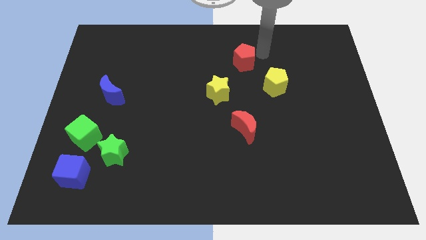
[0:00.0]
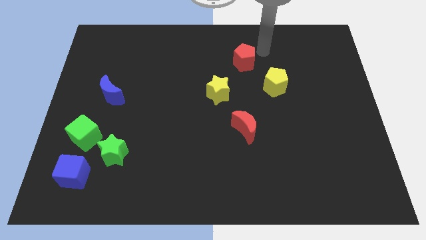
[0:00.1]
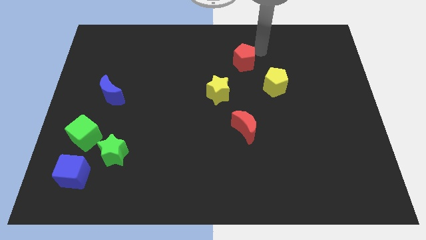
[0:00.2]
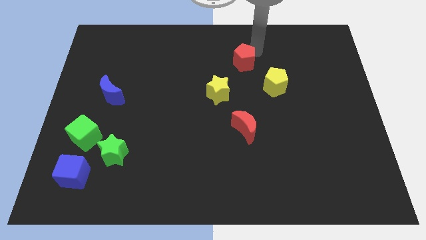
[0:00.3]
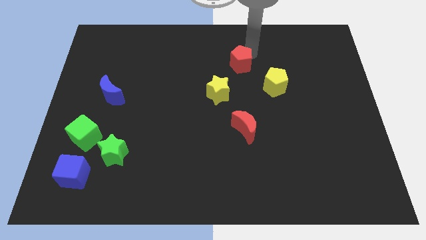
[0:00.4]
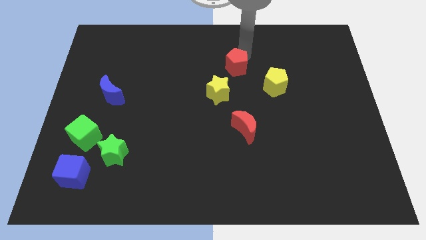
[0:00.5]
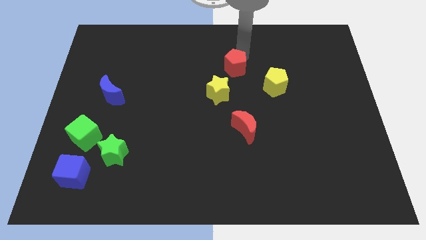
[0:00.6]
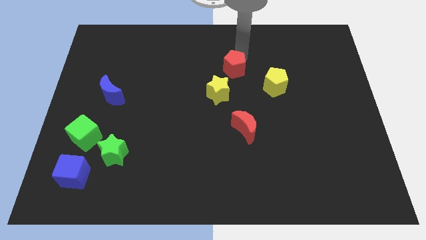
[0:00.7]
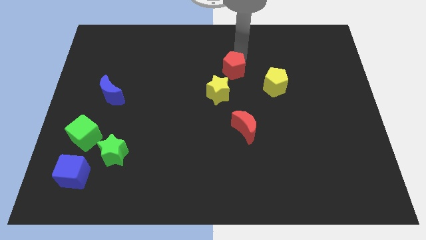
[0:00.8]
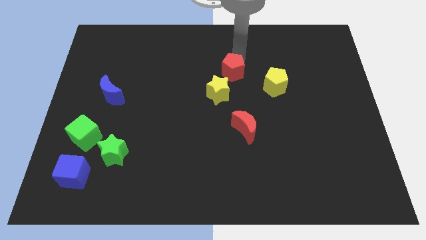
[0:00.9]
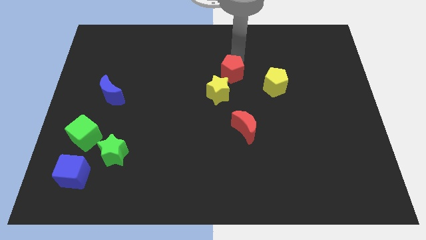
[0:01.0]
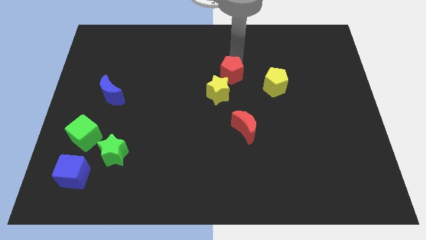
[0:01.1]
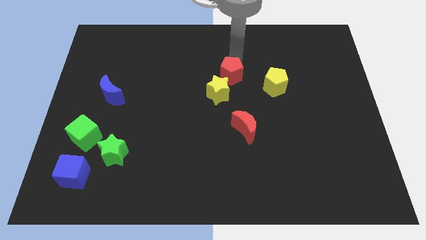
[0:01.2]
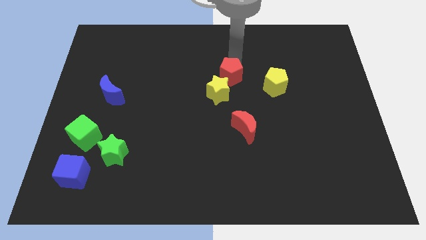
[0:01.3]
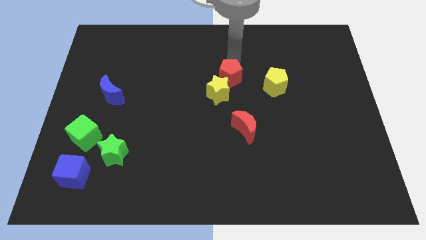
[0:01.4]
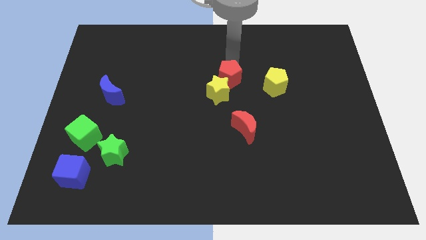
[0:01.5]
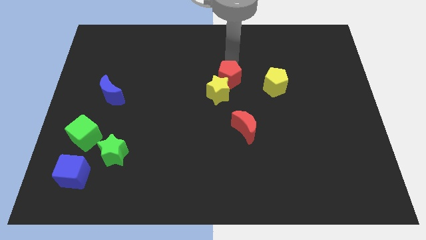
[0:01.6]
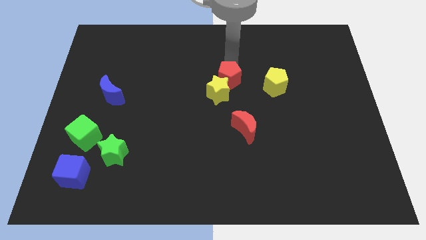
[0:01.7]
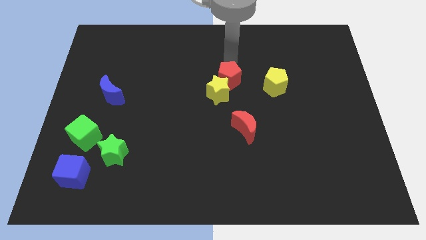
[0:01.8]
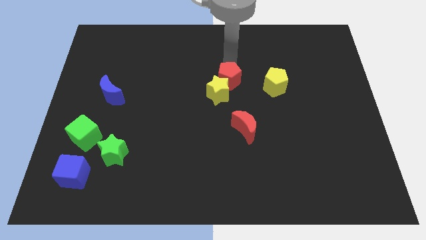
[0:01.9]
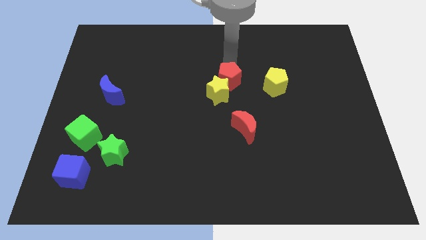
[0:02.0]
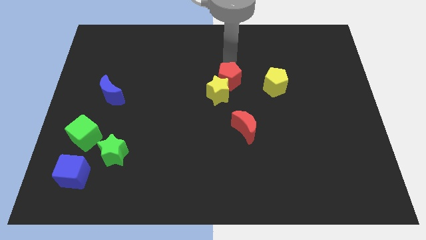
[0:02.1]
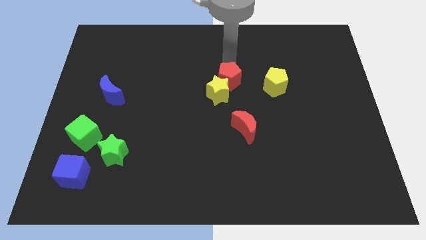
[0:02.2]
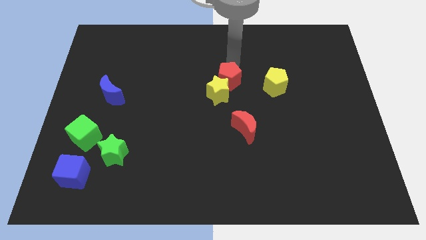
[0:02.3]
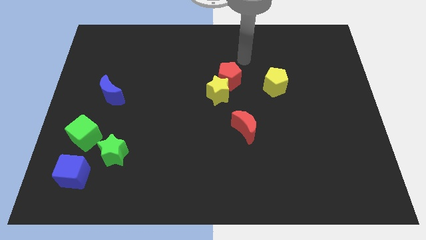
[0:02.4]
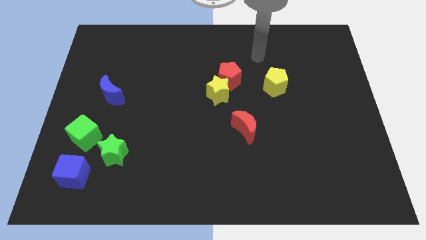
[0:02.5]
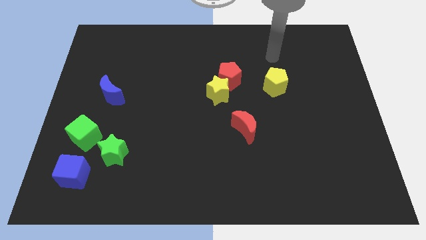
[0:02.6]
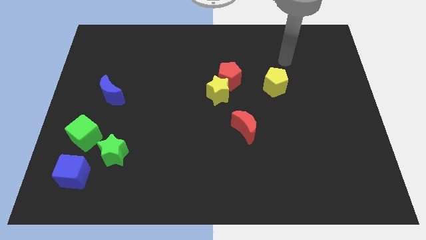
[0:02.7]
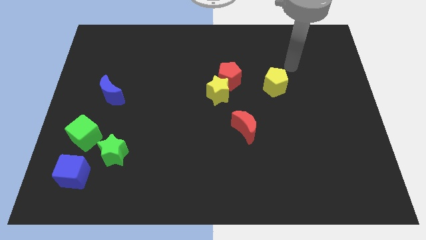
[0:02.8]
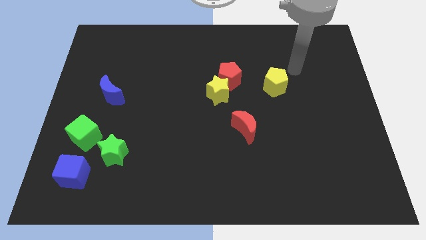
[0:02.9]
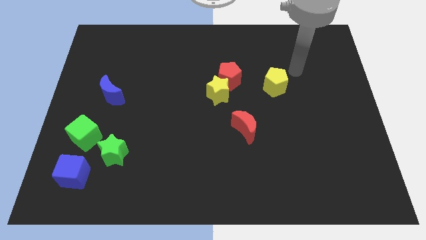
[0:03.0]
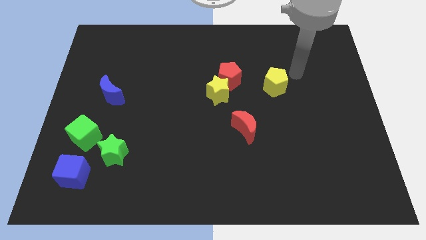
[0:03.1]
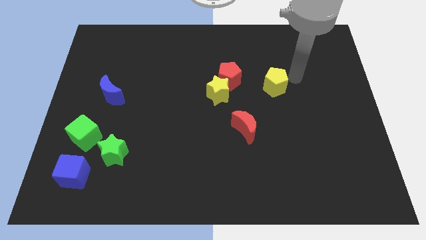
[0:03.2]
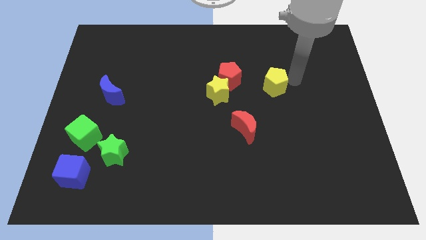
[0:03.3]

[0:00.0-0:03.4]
push red pentagon to yellow star

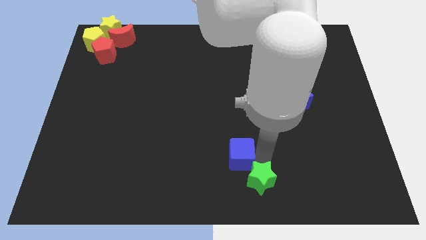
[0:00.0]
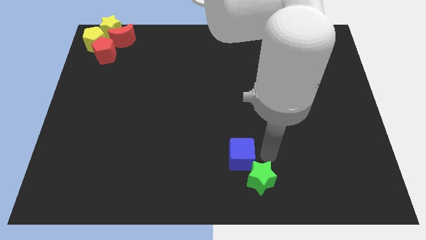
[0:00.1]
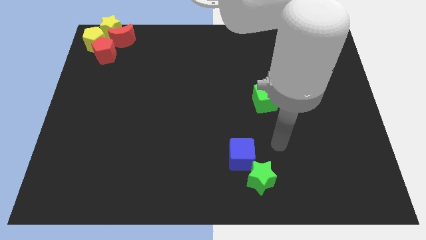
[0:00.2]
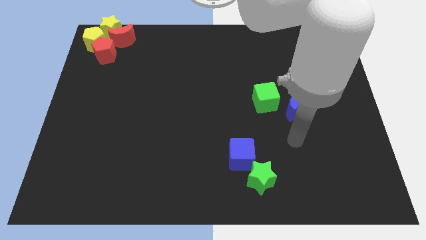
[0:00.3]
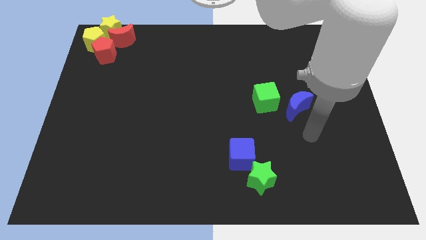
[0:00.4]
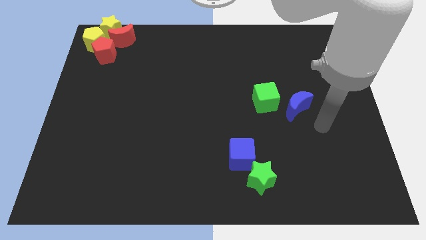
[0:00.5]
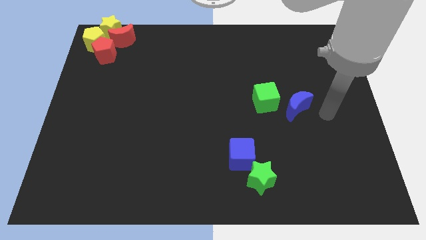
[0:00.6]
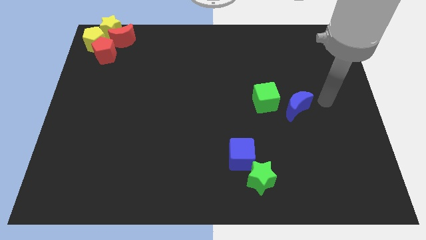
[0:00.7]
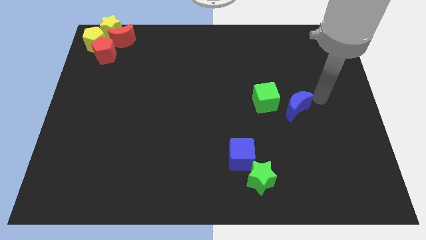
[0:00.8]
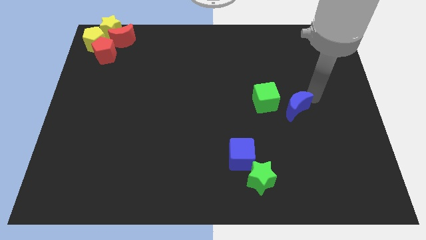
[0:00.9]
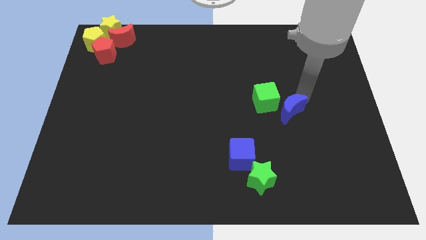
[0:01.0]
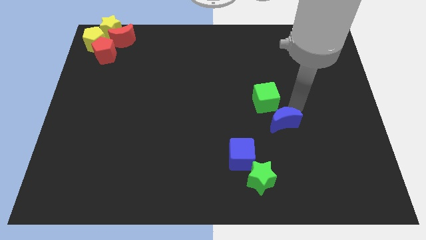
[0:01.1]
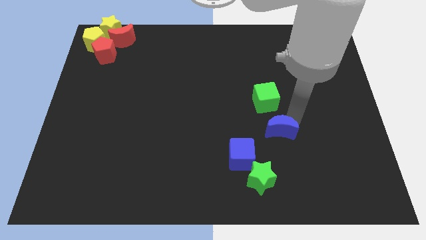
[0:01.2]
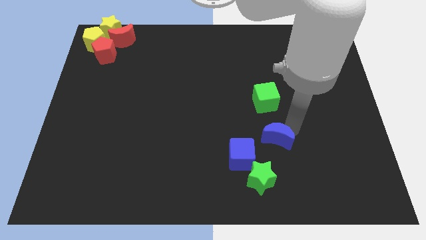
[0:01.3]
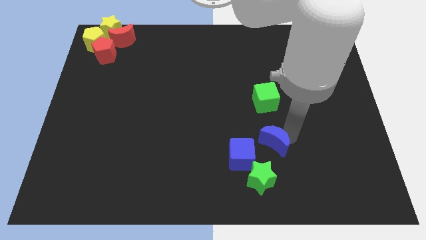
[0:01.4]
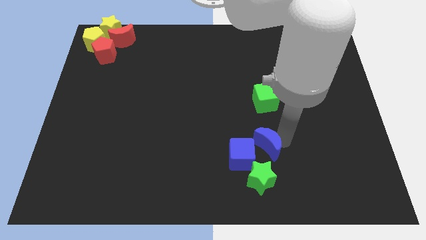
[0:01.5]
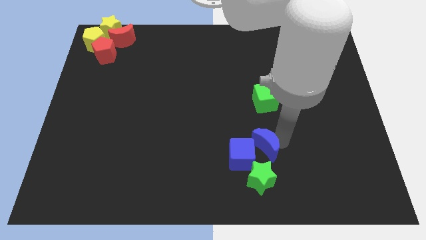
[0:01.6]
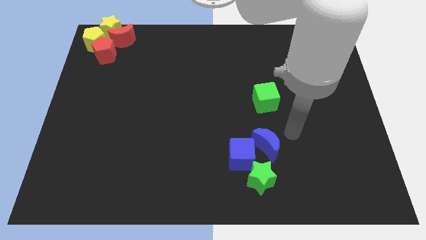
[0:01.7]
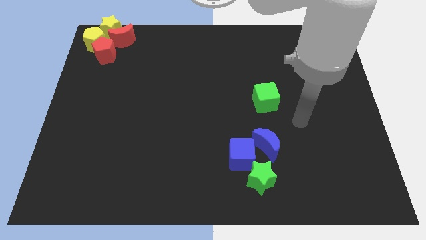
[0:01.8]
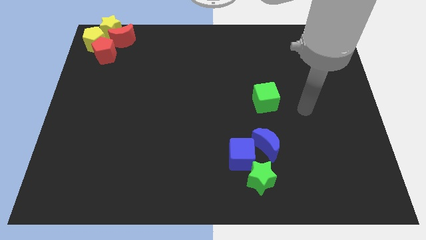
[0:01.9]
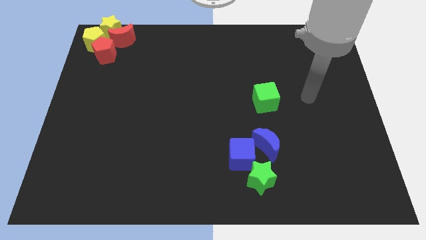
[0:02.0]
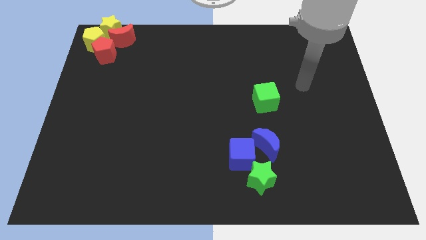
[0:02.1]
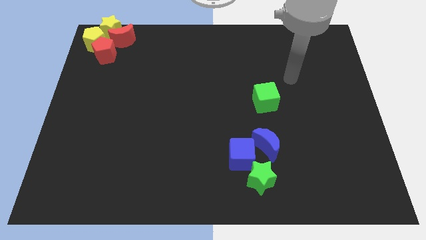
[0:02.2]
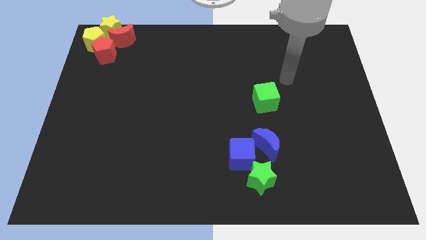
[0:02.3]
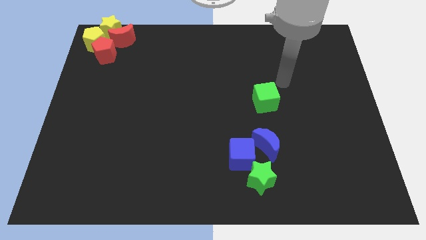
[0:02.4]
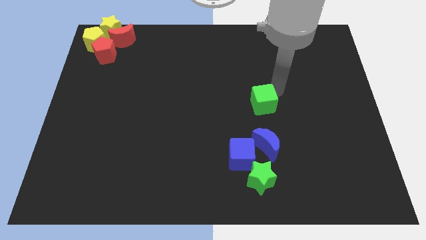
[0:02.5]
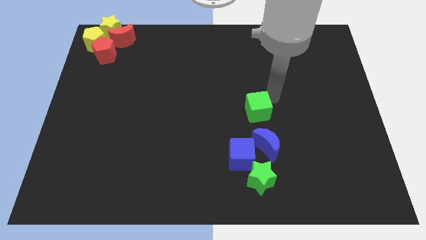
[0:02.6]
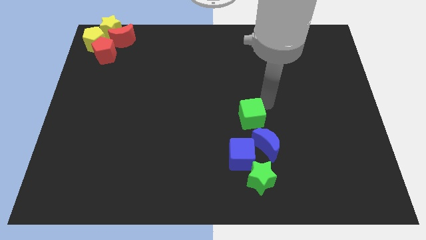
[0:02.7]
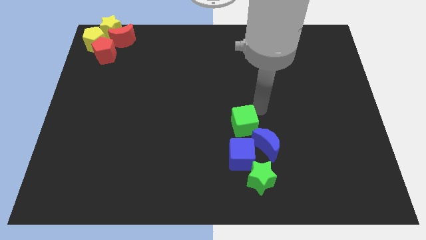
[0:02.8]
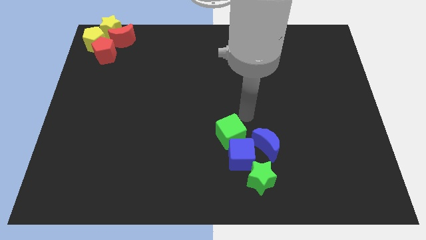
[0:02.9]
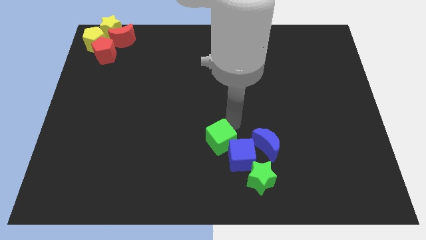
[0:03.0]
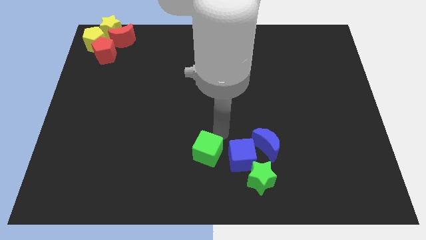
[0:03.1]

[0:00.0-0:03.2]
move the blue crescent and green cube to the group of blocks at the bottom center of the board

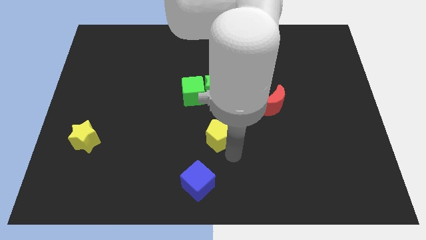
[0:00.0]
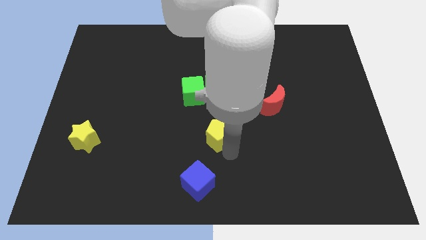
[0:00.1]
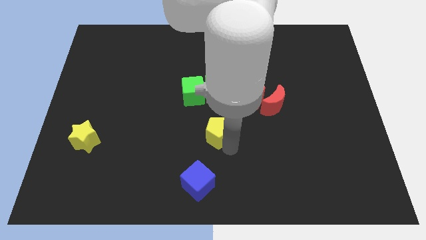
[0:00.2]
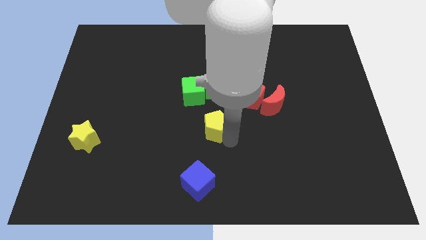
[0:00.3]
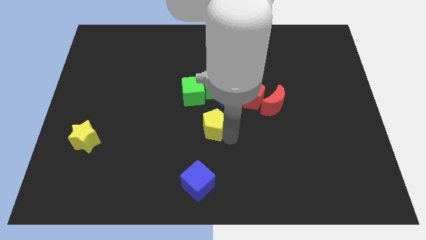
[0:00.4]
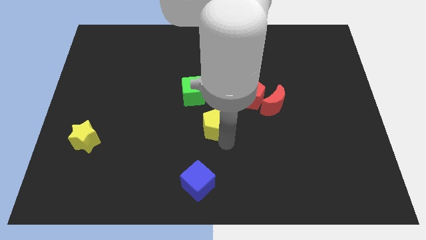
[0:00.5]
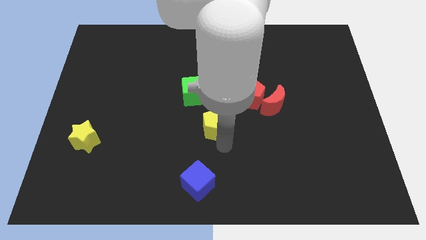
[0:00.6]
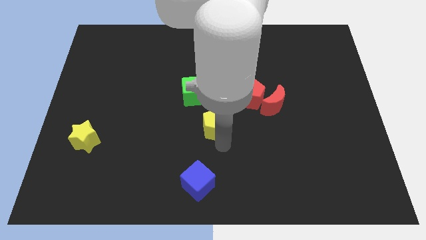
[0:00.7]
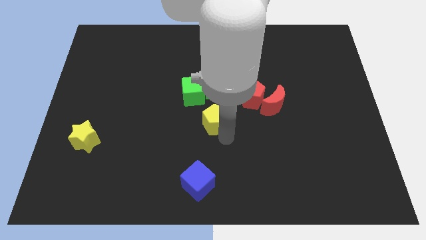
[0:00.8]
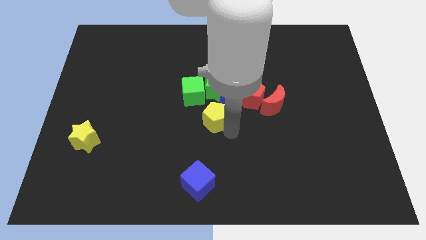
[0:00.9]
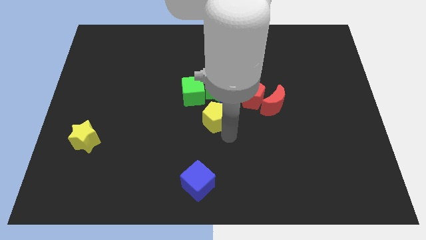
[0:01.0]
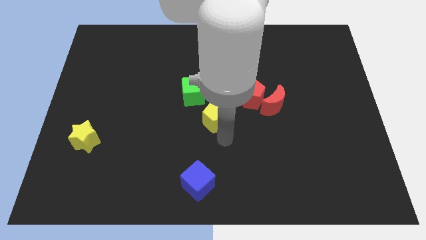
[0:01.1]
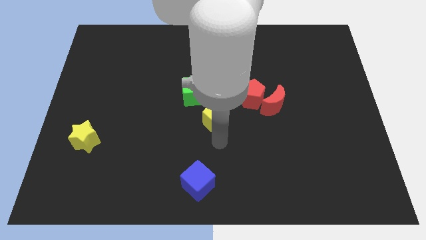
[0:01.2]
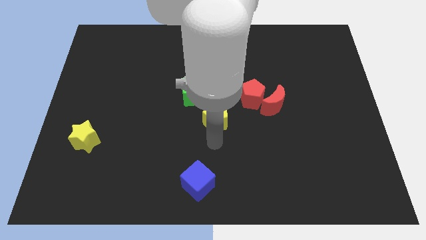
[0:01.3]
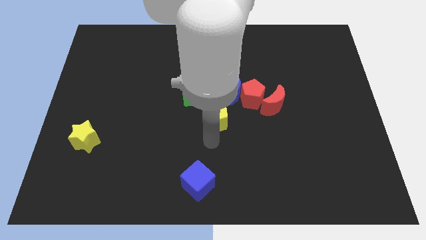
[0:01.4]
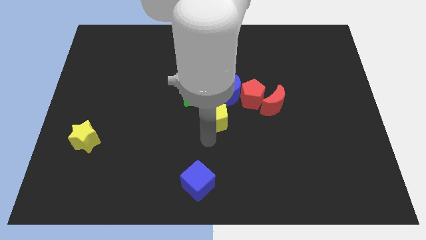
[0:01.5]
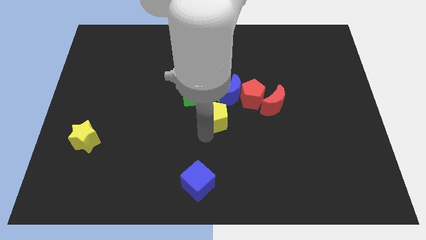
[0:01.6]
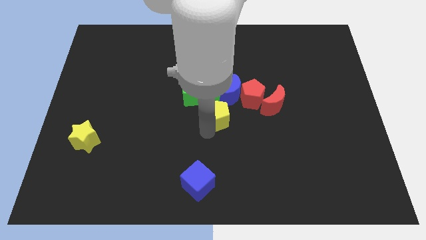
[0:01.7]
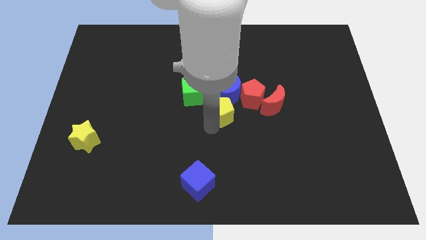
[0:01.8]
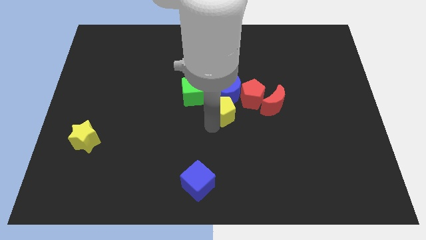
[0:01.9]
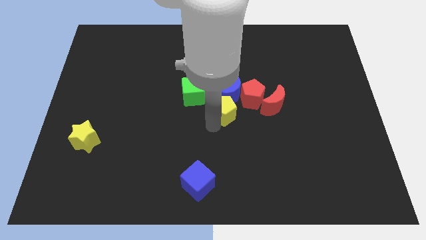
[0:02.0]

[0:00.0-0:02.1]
push the yellow pentagon into the blue moon

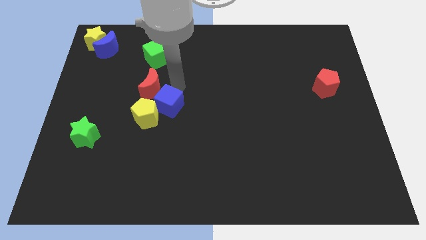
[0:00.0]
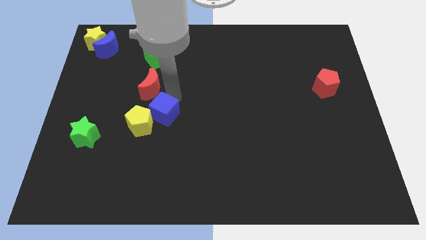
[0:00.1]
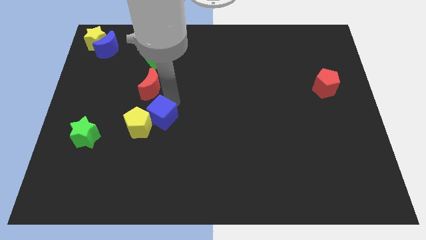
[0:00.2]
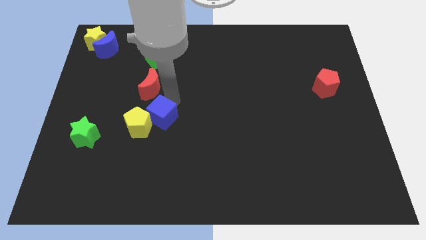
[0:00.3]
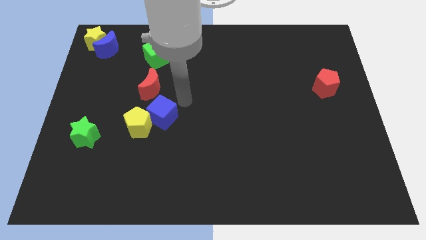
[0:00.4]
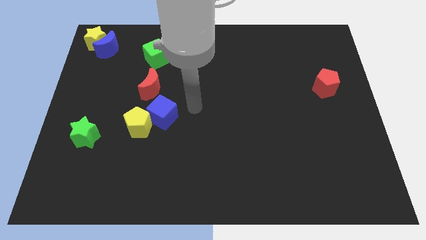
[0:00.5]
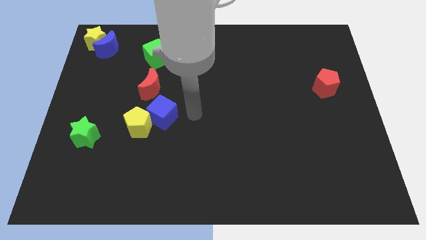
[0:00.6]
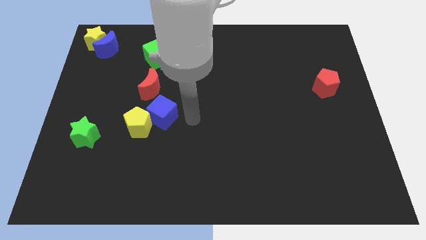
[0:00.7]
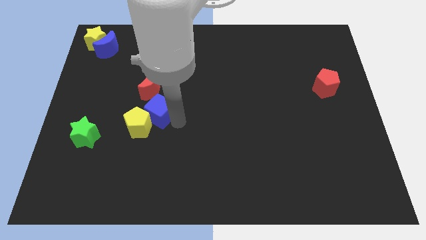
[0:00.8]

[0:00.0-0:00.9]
push the blue cube into the yellow pentagon
